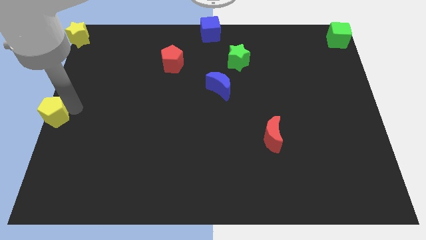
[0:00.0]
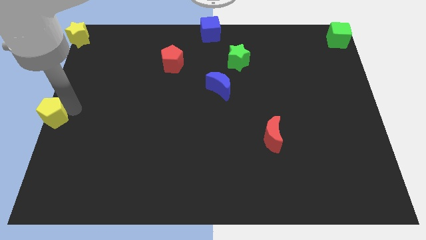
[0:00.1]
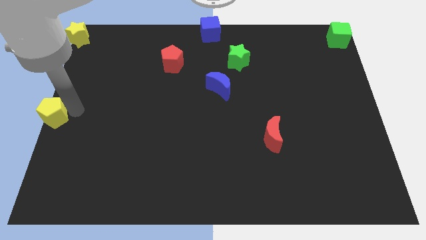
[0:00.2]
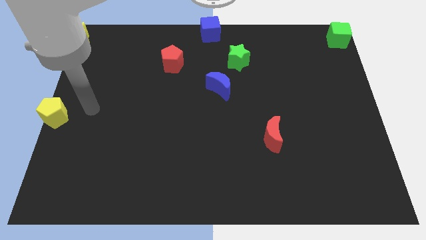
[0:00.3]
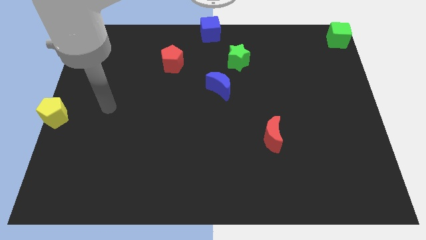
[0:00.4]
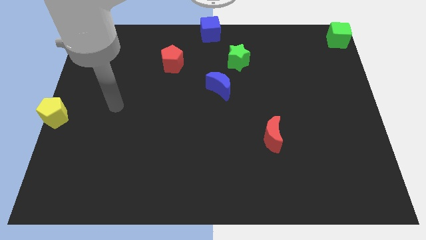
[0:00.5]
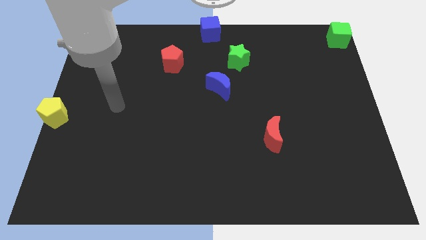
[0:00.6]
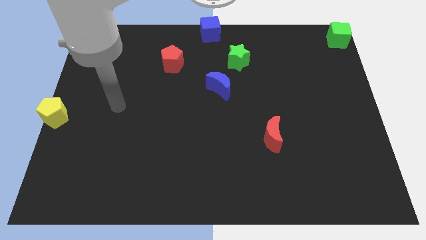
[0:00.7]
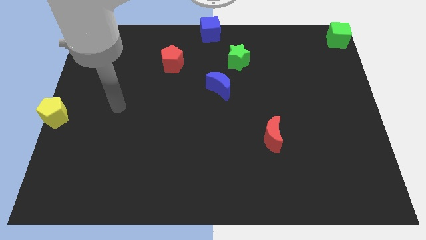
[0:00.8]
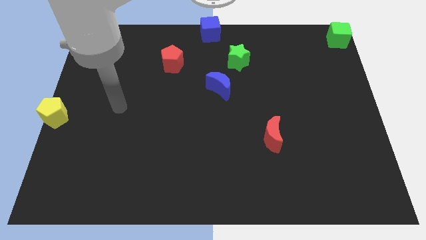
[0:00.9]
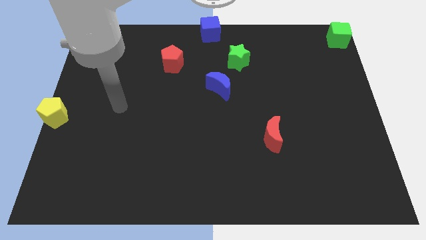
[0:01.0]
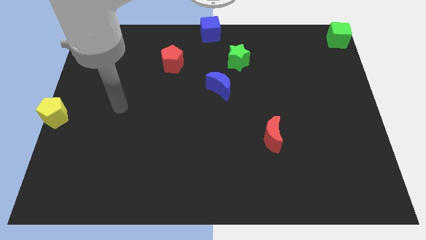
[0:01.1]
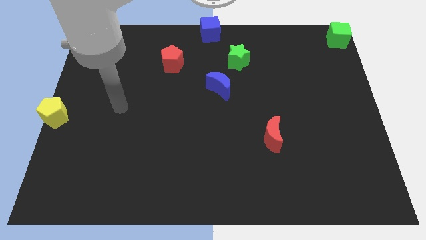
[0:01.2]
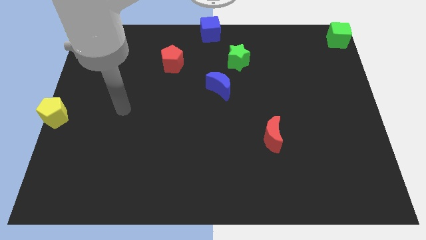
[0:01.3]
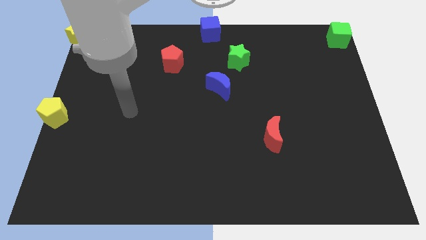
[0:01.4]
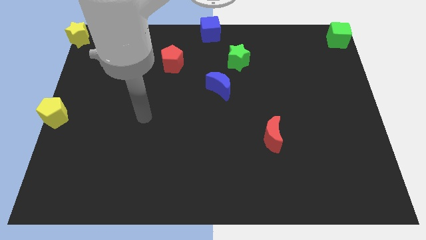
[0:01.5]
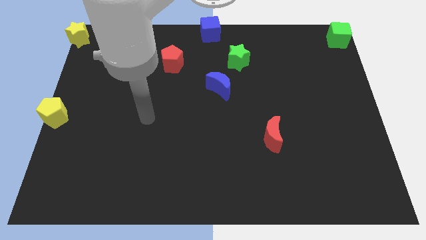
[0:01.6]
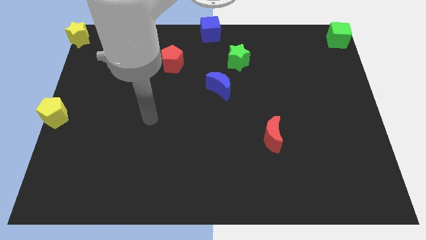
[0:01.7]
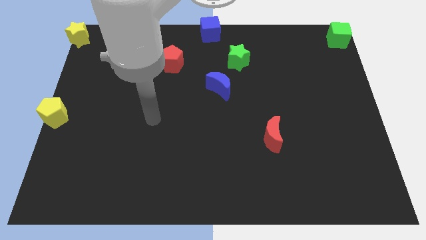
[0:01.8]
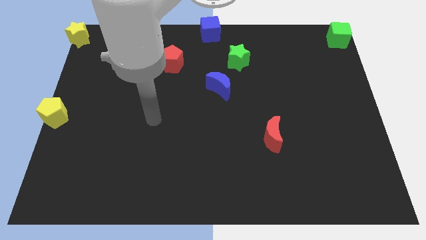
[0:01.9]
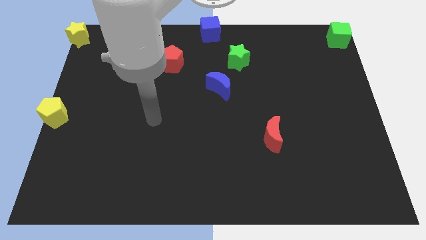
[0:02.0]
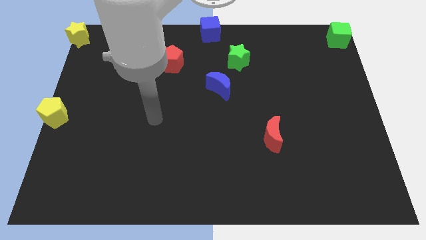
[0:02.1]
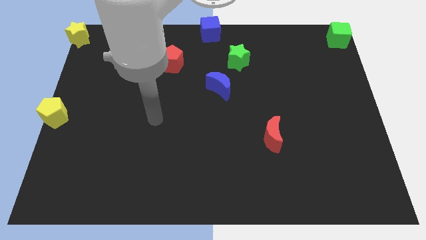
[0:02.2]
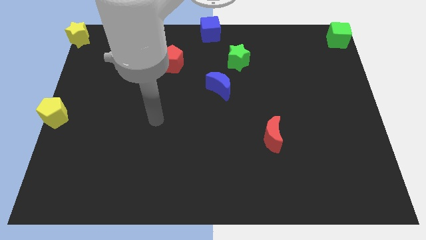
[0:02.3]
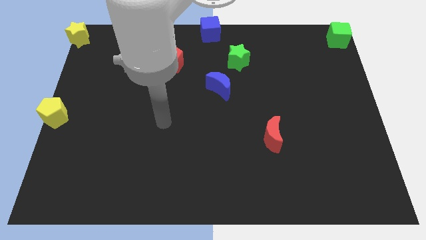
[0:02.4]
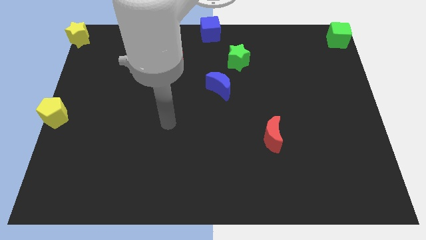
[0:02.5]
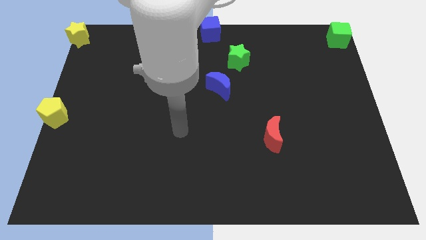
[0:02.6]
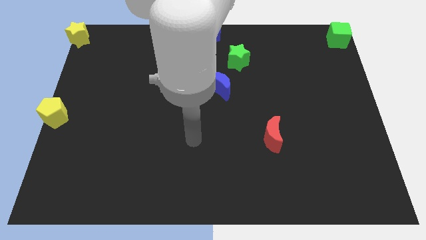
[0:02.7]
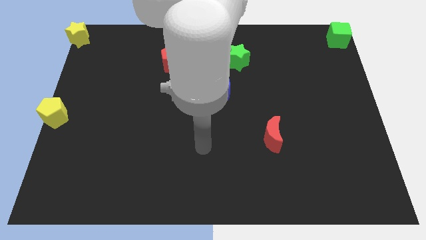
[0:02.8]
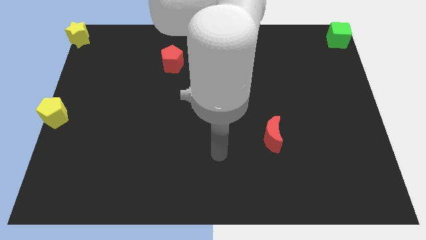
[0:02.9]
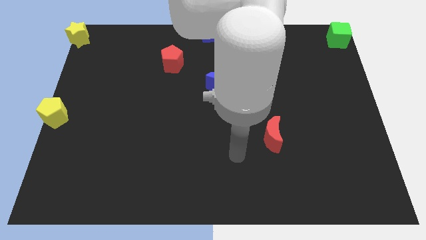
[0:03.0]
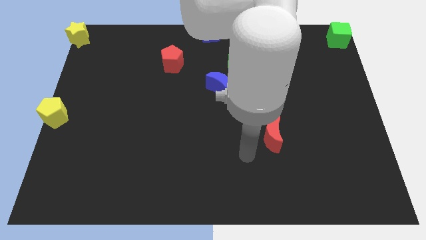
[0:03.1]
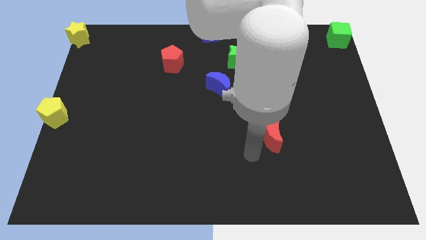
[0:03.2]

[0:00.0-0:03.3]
move your arm and point to the left of red moon

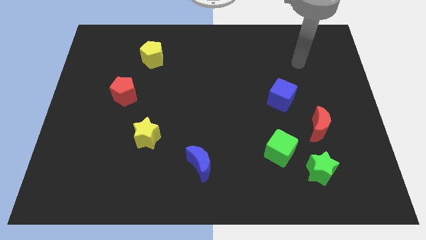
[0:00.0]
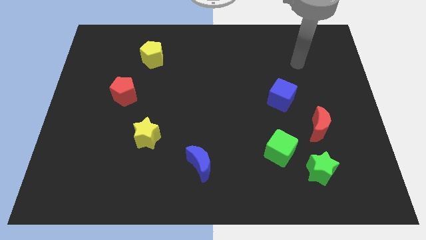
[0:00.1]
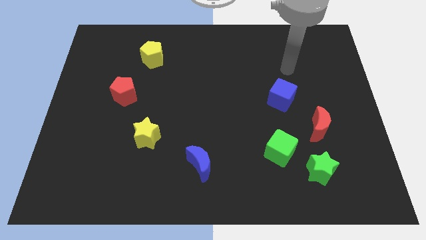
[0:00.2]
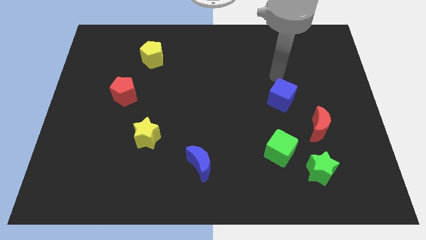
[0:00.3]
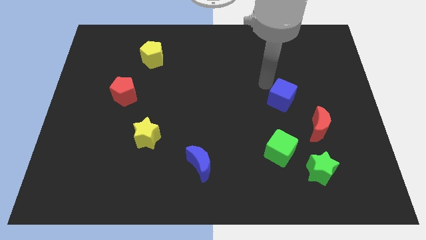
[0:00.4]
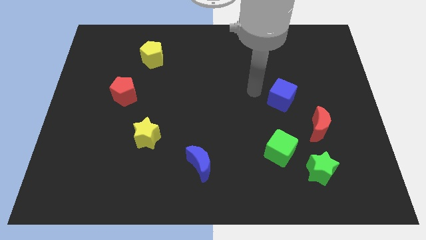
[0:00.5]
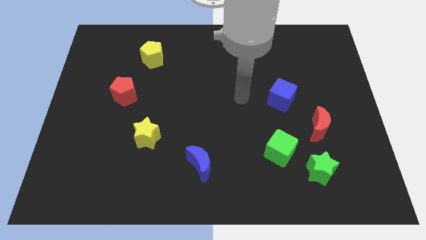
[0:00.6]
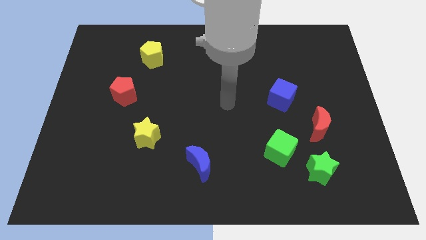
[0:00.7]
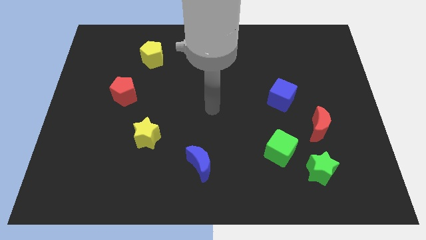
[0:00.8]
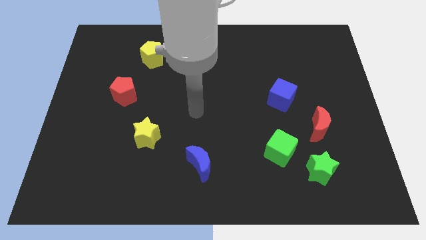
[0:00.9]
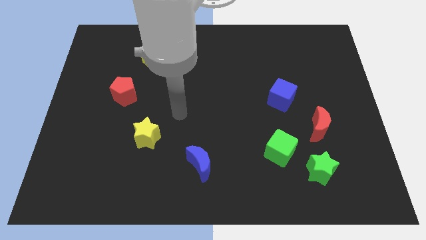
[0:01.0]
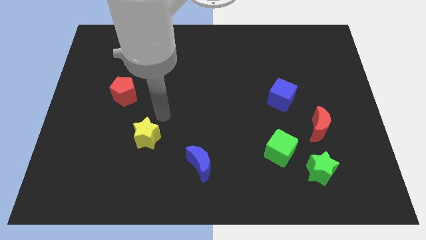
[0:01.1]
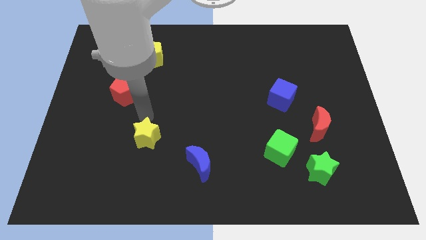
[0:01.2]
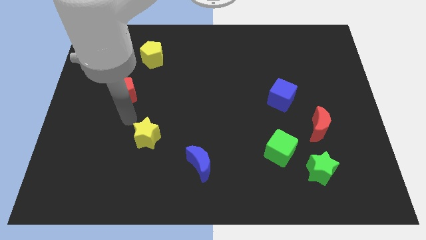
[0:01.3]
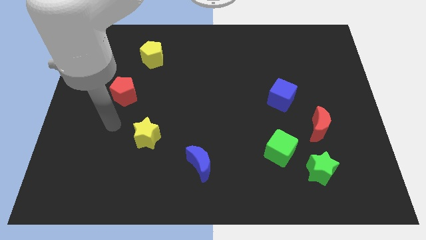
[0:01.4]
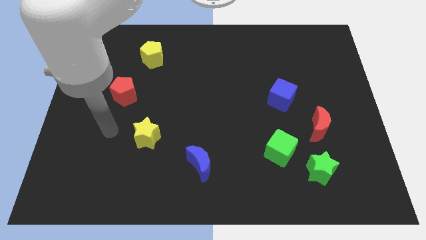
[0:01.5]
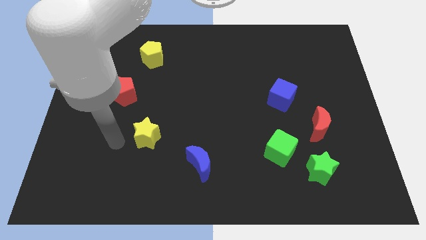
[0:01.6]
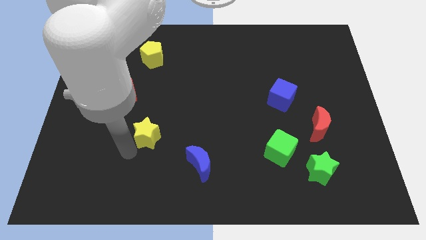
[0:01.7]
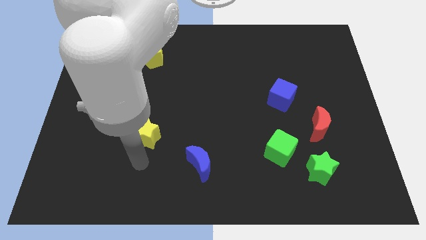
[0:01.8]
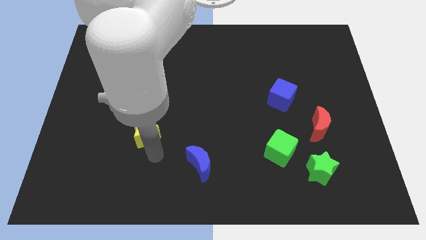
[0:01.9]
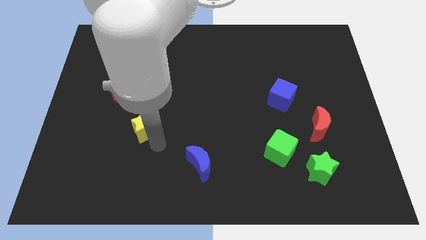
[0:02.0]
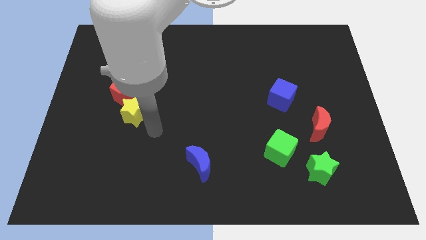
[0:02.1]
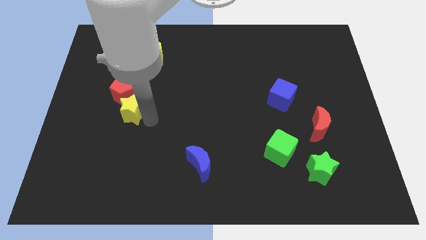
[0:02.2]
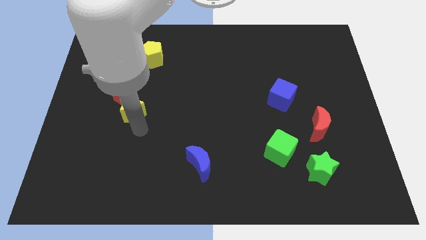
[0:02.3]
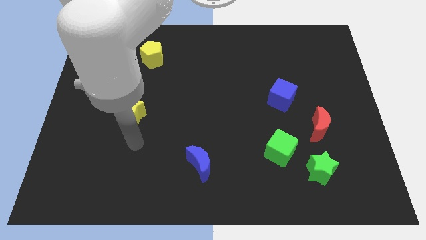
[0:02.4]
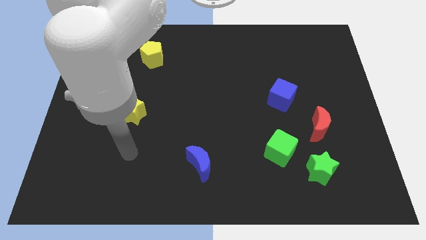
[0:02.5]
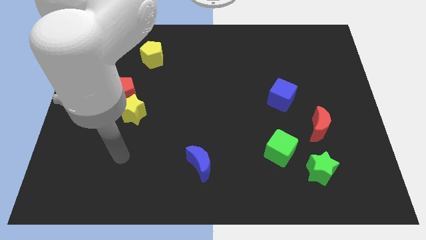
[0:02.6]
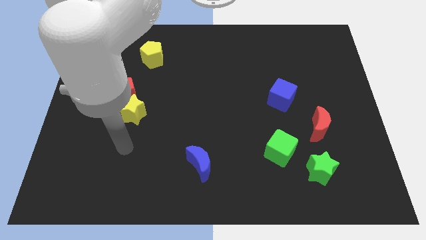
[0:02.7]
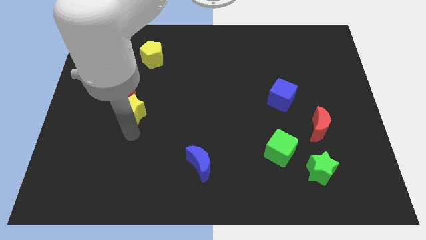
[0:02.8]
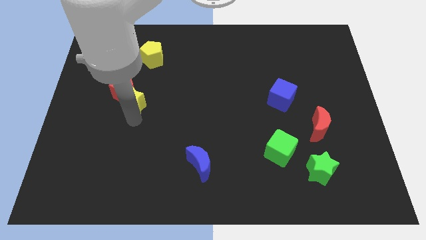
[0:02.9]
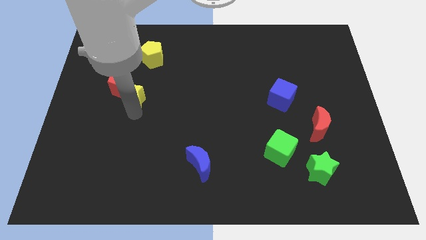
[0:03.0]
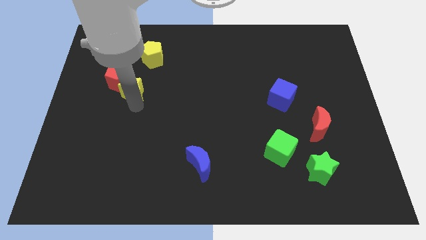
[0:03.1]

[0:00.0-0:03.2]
move yellow star close to red pentagon

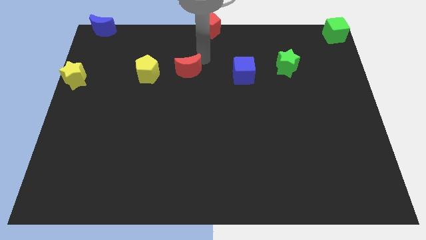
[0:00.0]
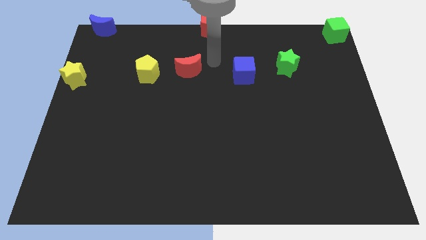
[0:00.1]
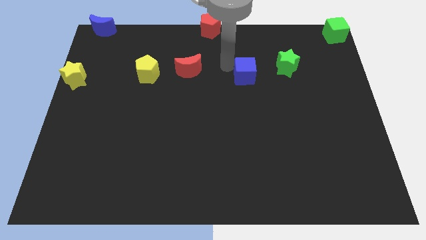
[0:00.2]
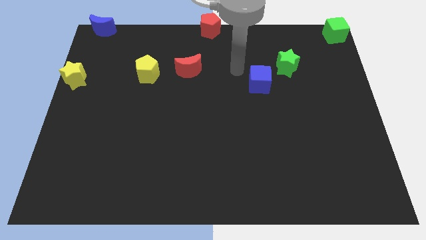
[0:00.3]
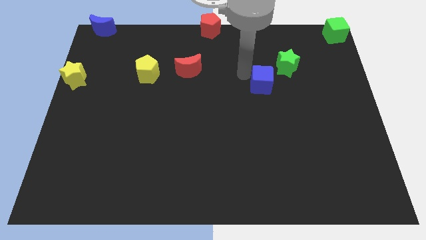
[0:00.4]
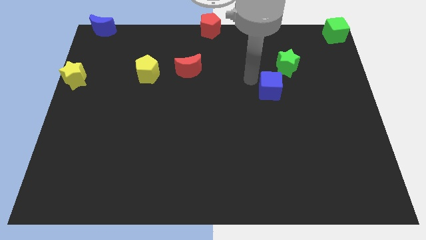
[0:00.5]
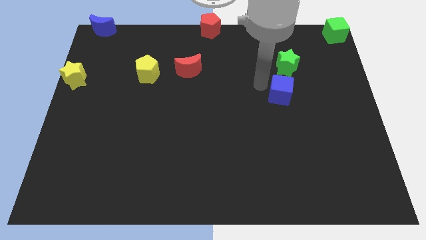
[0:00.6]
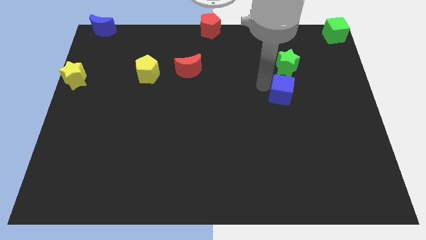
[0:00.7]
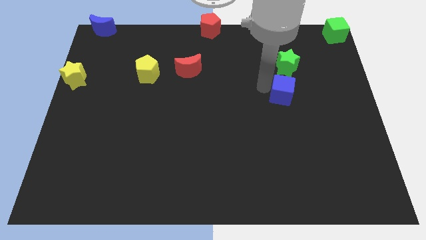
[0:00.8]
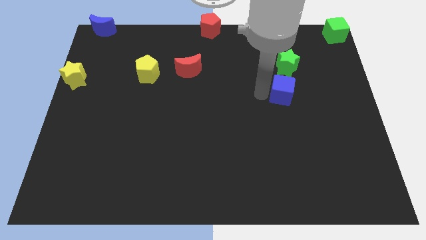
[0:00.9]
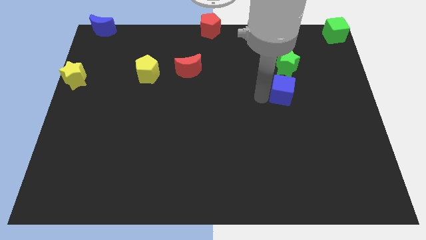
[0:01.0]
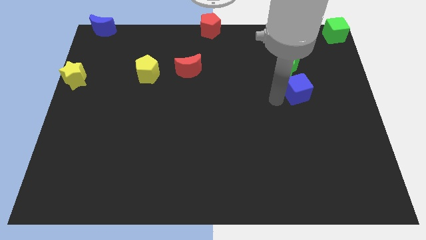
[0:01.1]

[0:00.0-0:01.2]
move the blue cube to the bottom side of the green star

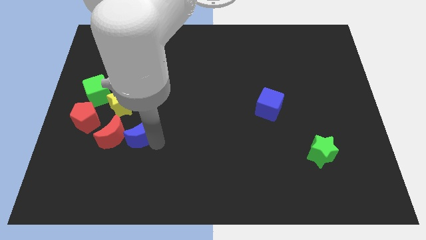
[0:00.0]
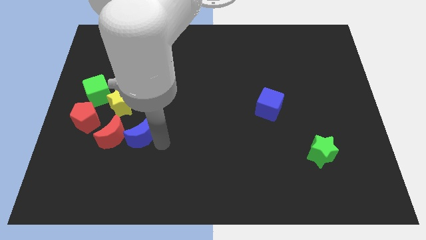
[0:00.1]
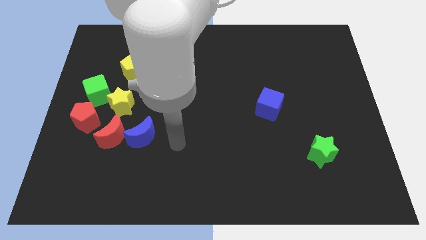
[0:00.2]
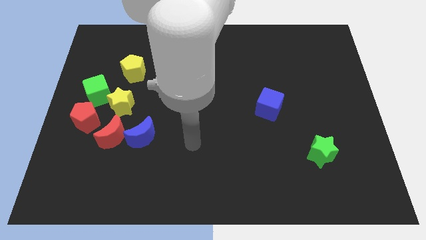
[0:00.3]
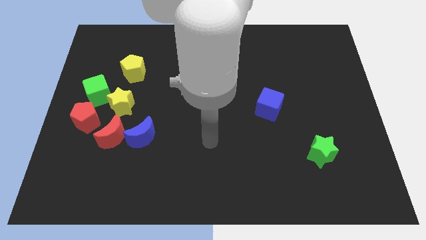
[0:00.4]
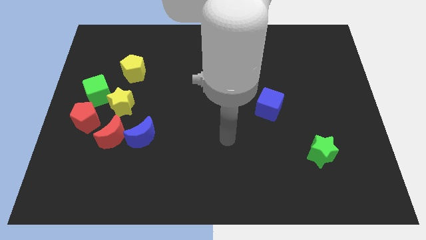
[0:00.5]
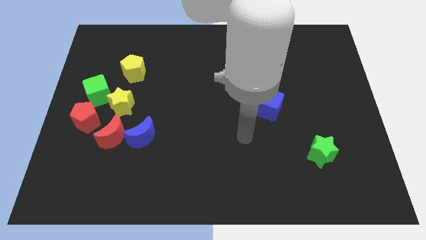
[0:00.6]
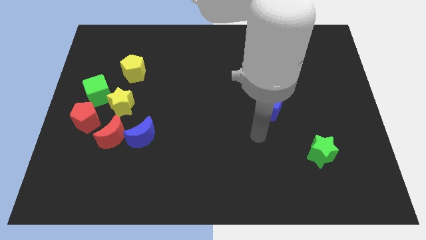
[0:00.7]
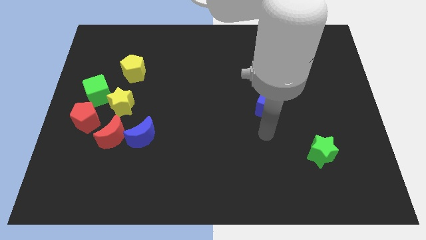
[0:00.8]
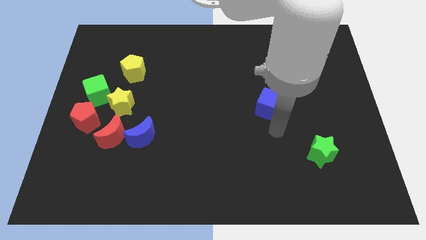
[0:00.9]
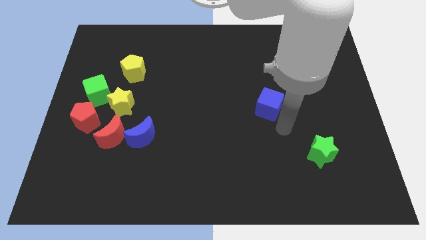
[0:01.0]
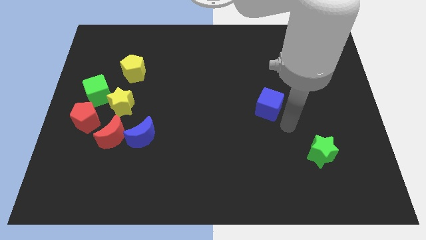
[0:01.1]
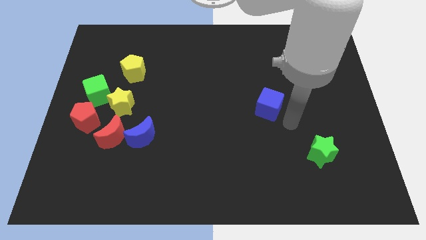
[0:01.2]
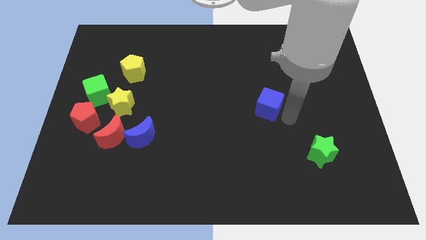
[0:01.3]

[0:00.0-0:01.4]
move your arm away from blue moon
